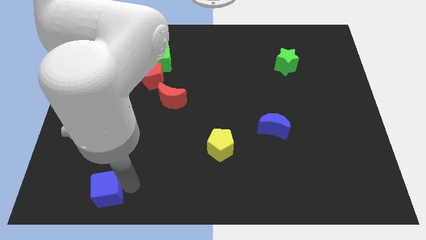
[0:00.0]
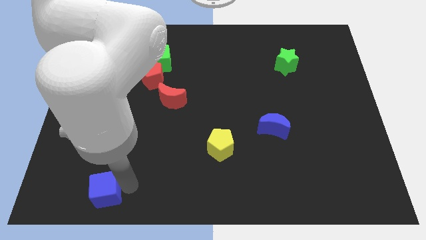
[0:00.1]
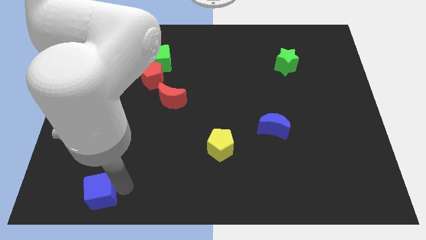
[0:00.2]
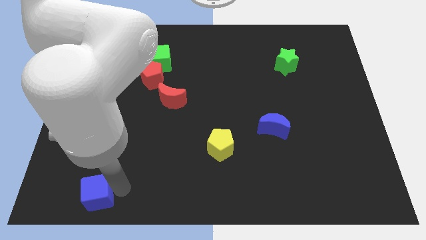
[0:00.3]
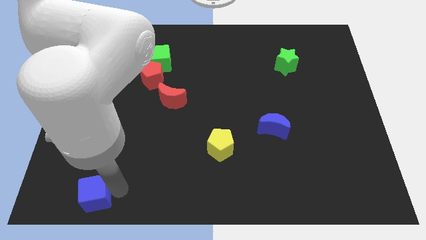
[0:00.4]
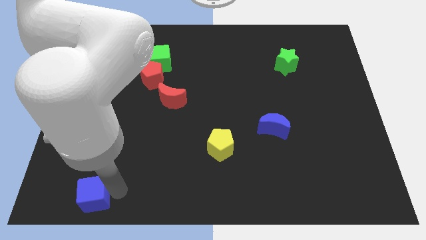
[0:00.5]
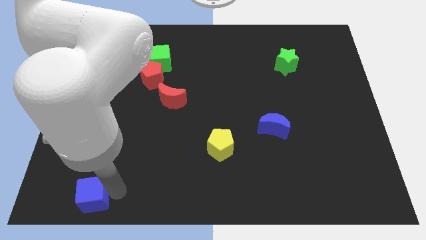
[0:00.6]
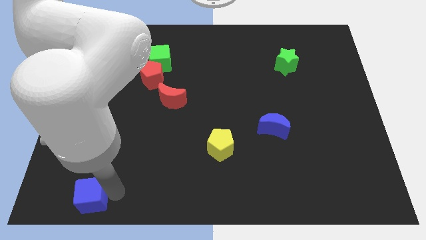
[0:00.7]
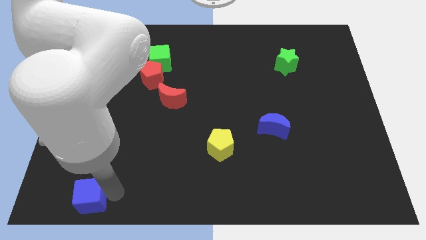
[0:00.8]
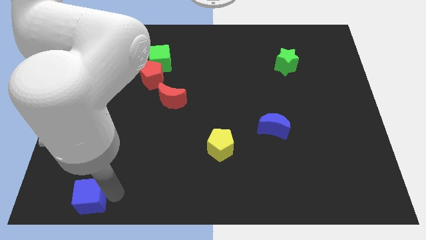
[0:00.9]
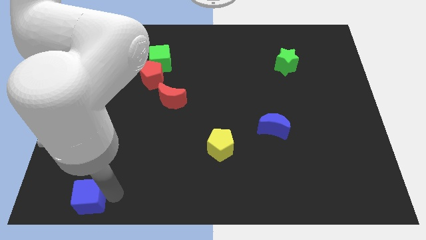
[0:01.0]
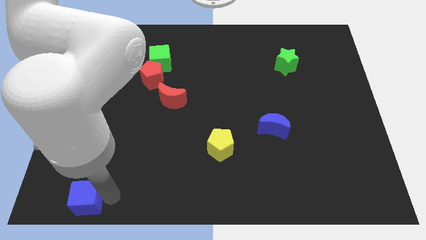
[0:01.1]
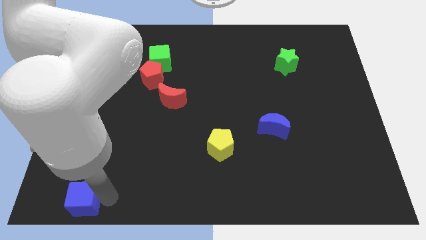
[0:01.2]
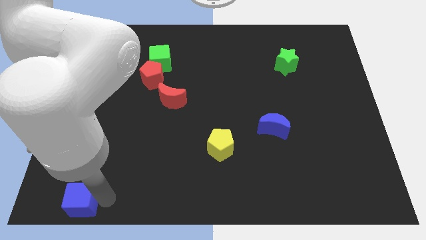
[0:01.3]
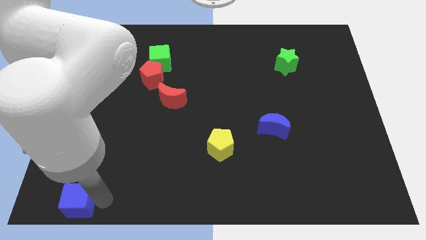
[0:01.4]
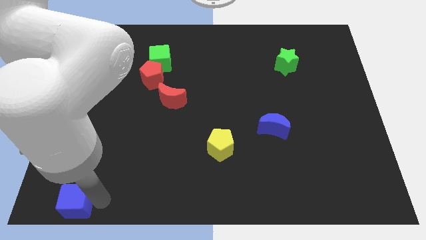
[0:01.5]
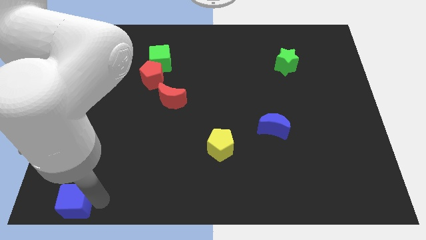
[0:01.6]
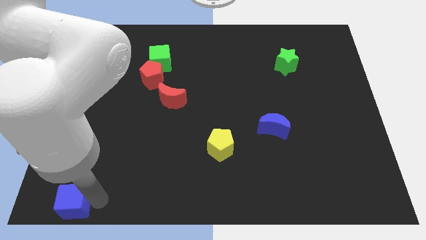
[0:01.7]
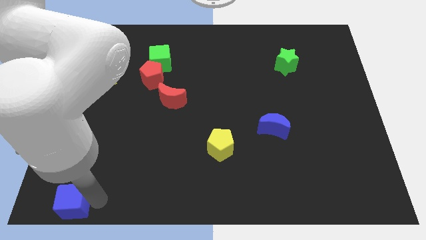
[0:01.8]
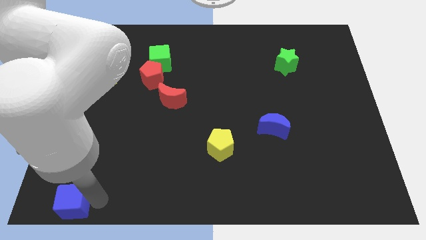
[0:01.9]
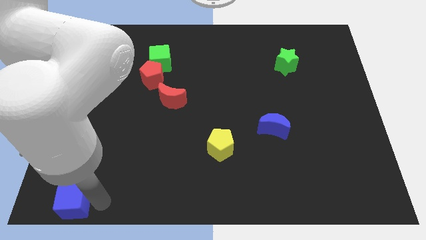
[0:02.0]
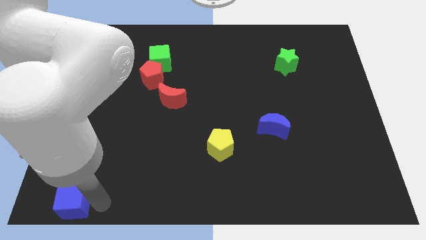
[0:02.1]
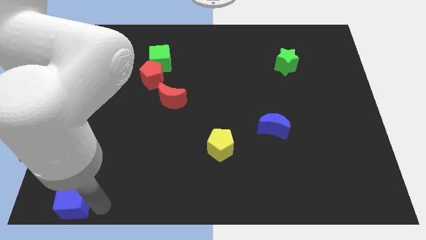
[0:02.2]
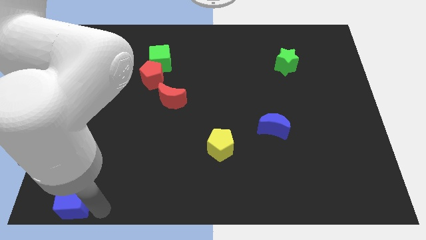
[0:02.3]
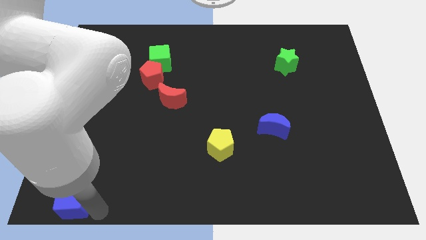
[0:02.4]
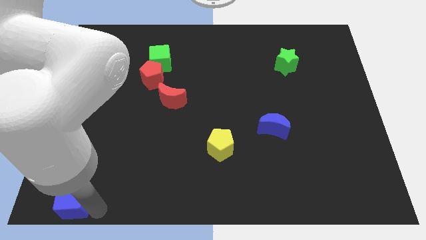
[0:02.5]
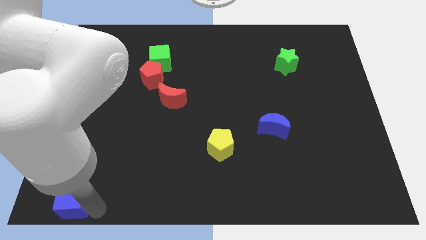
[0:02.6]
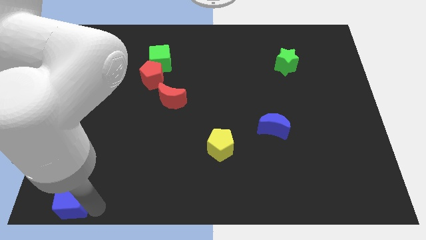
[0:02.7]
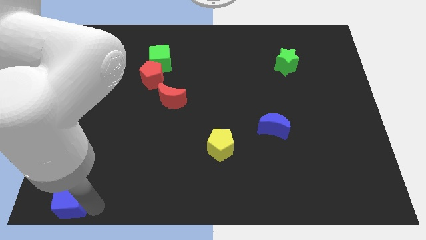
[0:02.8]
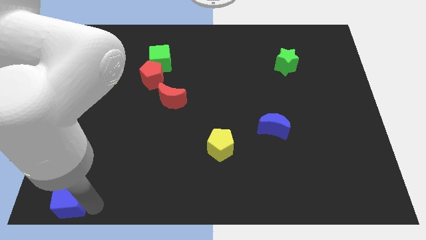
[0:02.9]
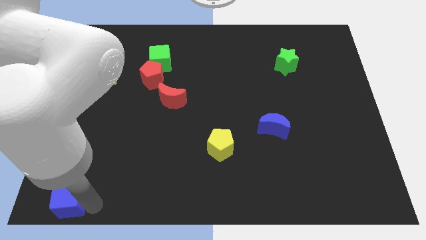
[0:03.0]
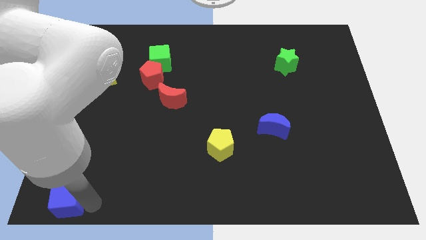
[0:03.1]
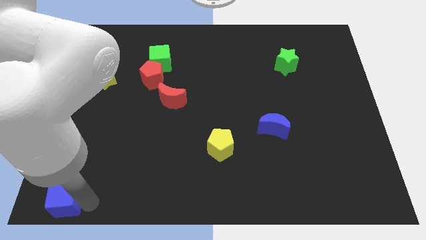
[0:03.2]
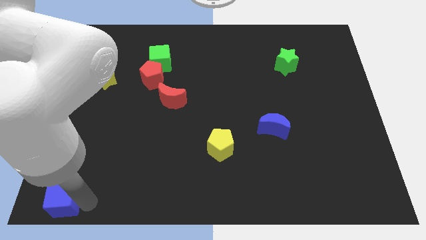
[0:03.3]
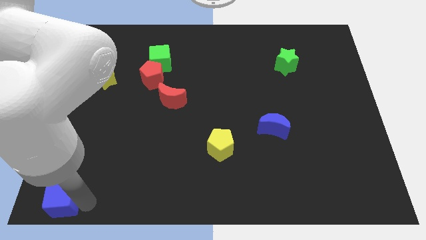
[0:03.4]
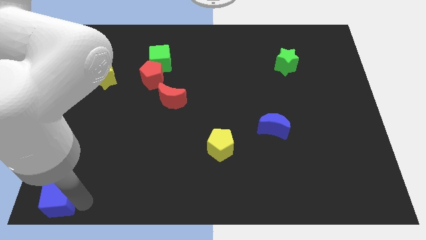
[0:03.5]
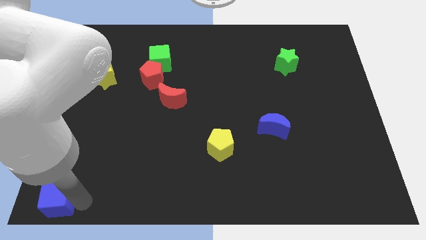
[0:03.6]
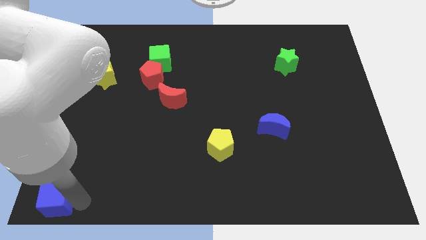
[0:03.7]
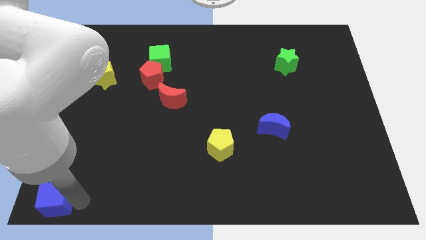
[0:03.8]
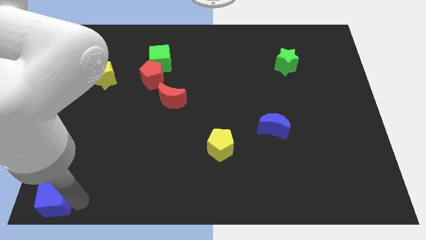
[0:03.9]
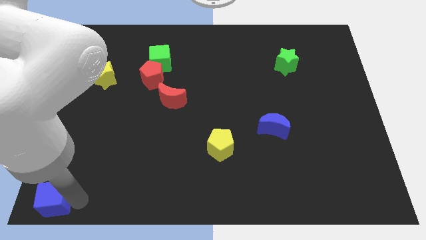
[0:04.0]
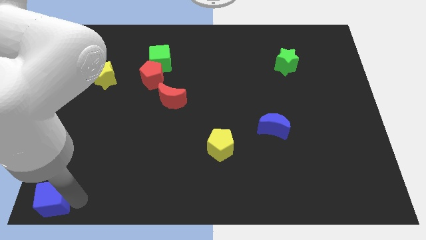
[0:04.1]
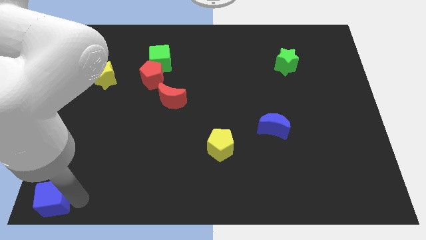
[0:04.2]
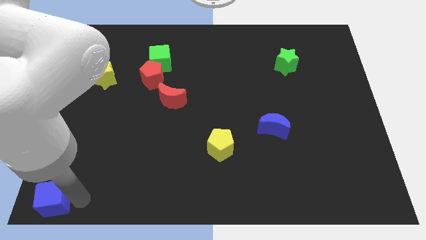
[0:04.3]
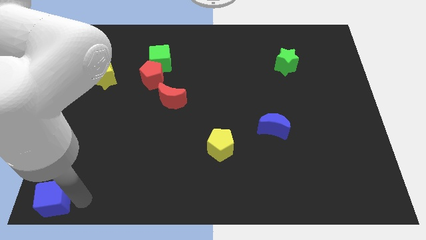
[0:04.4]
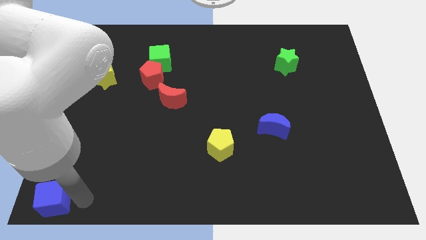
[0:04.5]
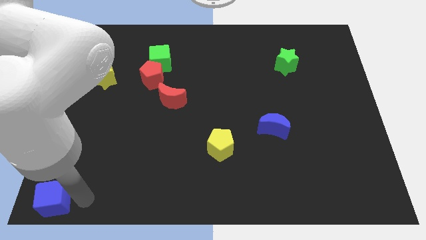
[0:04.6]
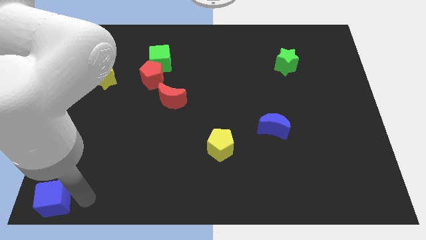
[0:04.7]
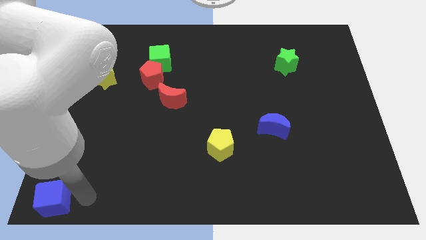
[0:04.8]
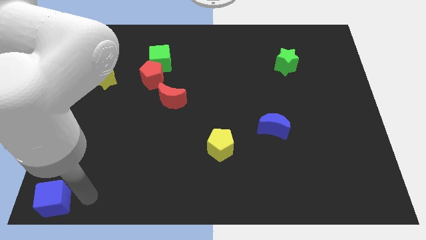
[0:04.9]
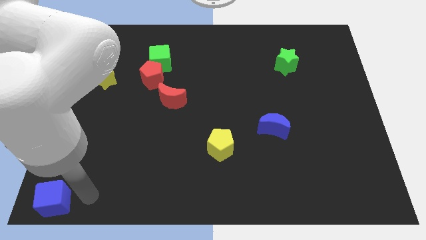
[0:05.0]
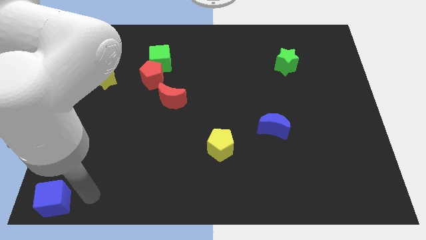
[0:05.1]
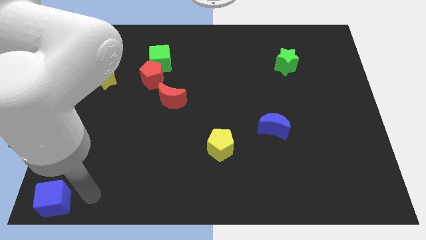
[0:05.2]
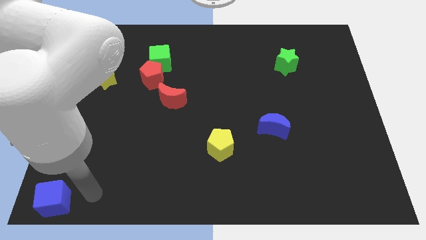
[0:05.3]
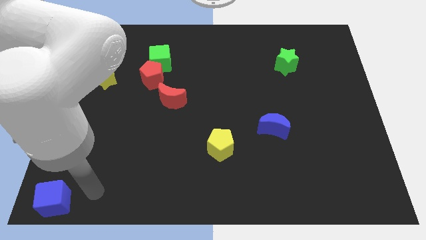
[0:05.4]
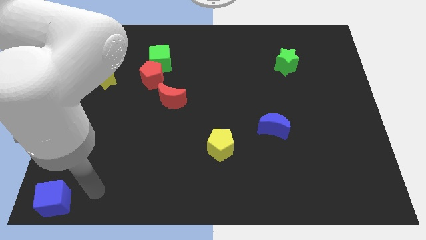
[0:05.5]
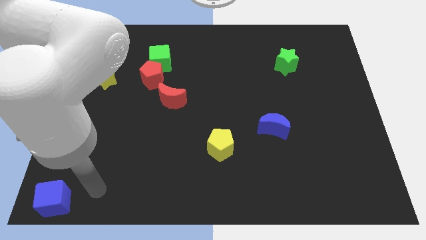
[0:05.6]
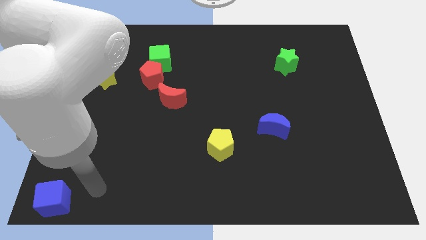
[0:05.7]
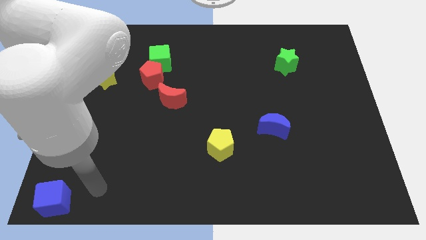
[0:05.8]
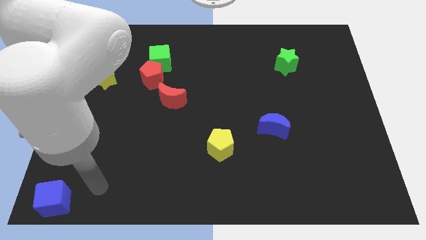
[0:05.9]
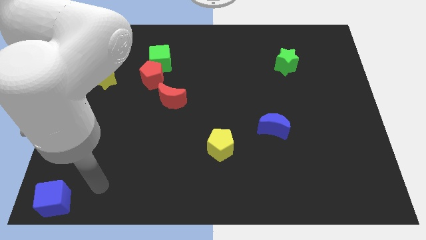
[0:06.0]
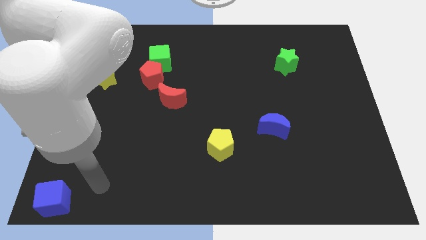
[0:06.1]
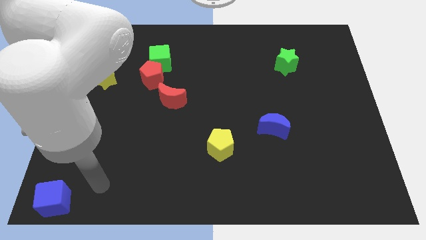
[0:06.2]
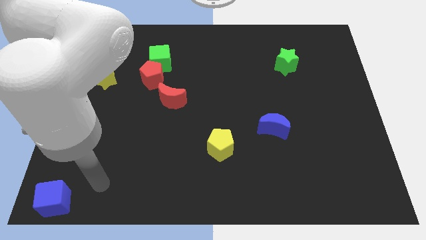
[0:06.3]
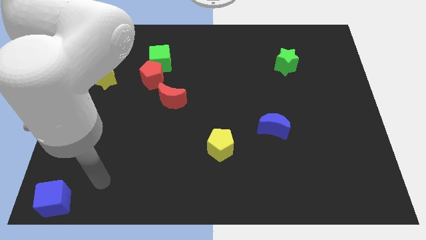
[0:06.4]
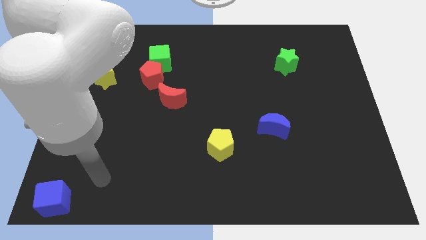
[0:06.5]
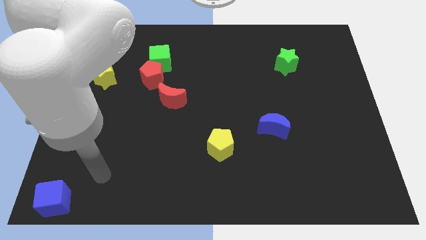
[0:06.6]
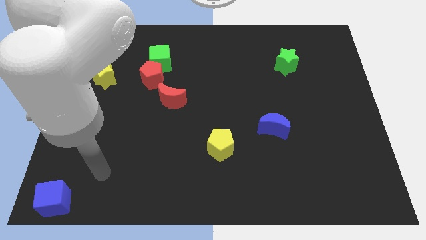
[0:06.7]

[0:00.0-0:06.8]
place the blue cube to the bottom left side of the board

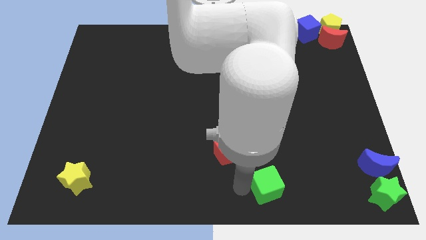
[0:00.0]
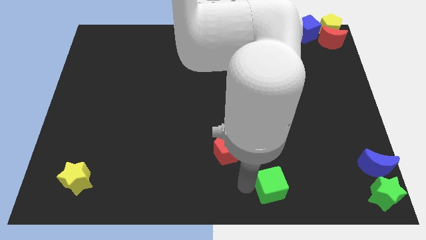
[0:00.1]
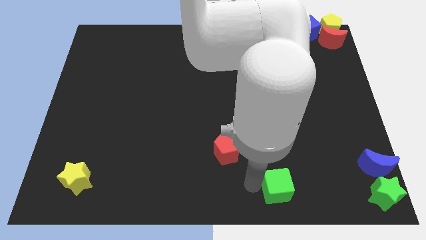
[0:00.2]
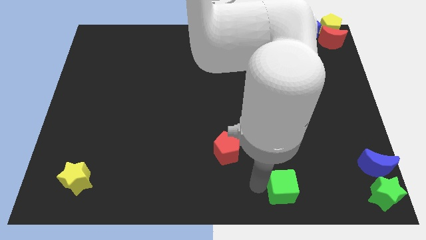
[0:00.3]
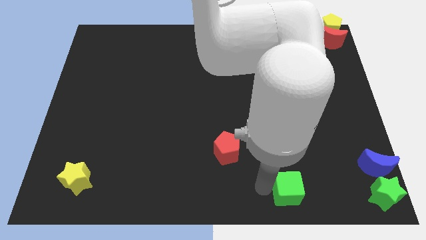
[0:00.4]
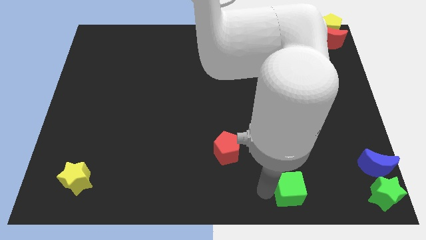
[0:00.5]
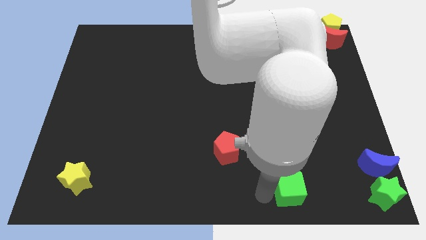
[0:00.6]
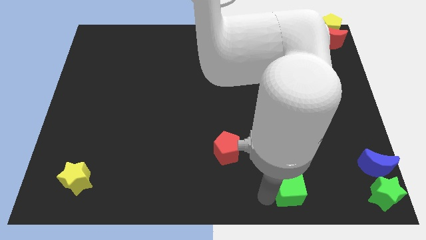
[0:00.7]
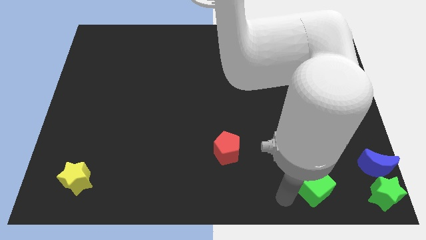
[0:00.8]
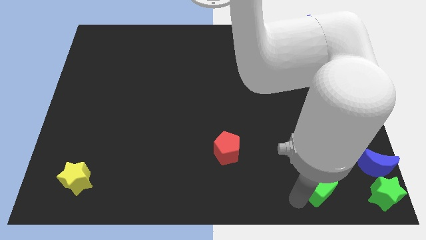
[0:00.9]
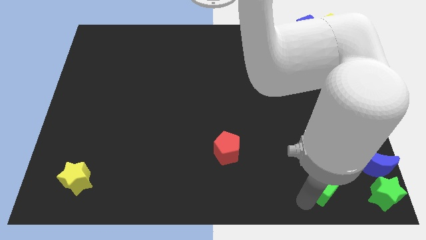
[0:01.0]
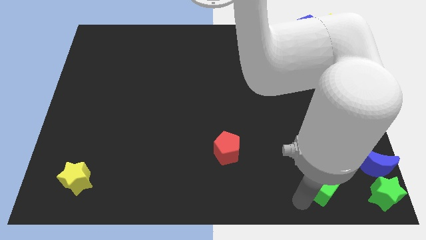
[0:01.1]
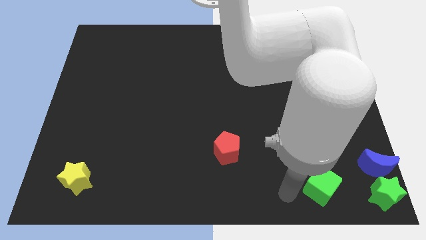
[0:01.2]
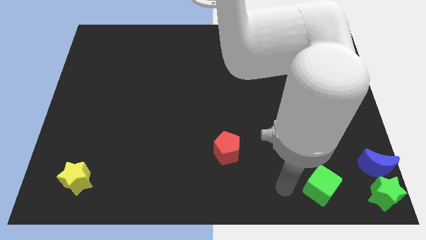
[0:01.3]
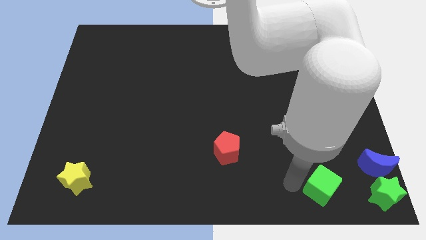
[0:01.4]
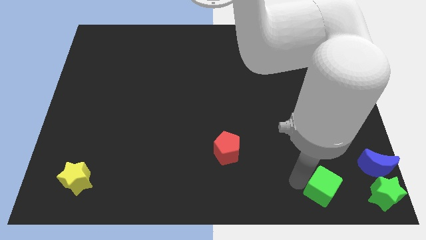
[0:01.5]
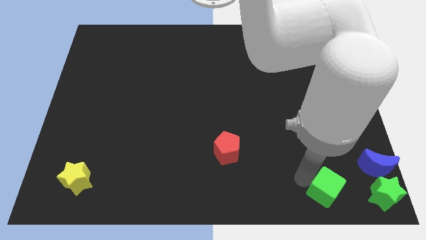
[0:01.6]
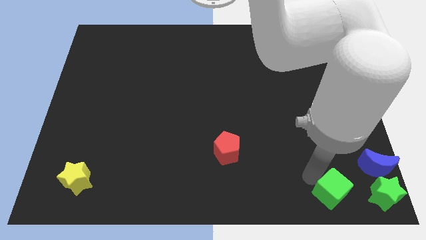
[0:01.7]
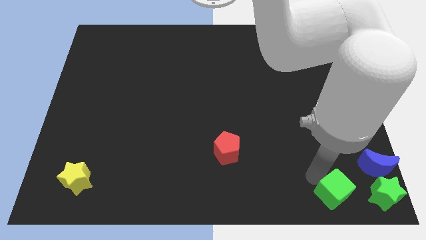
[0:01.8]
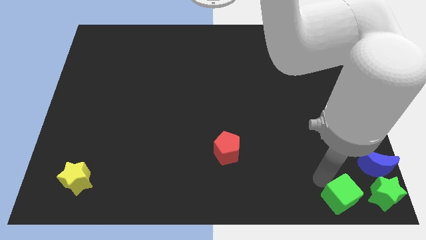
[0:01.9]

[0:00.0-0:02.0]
push the green cube close to the green star

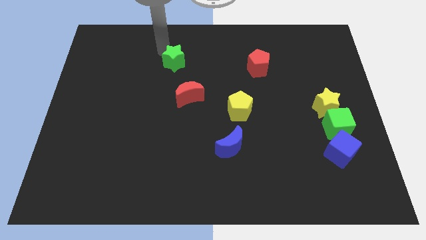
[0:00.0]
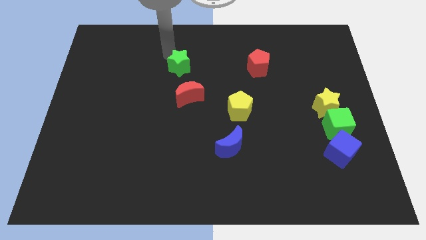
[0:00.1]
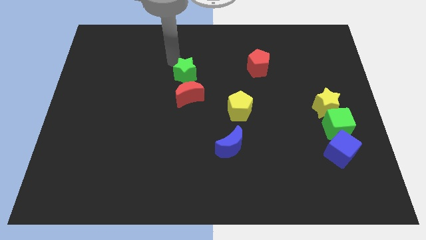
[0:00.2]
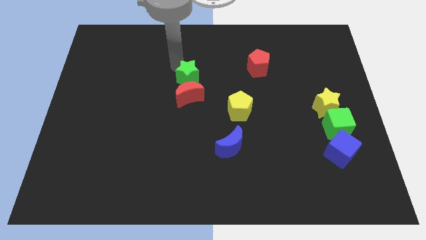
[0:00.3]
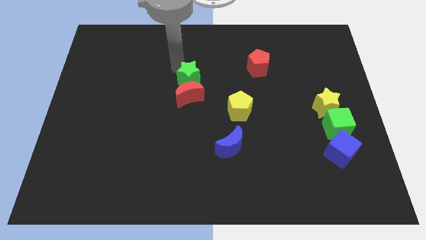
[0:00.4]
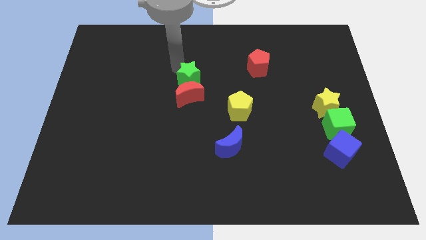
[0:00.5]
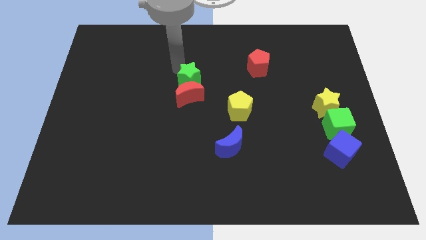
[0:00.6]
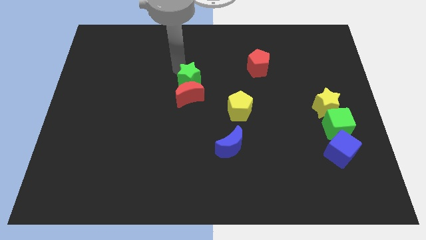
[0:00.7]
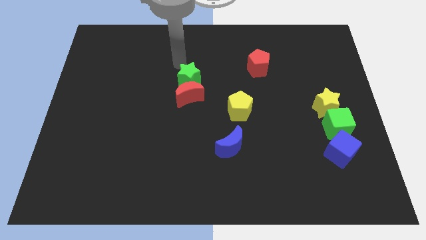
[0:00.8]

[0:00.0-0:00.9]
place the green star above the red crescent
